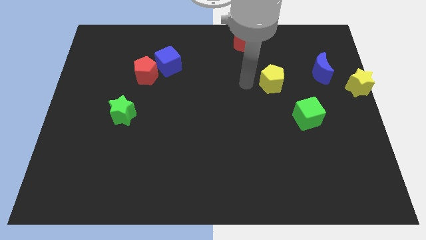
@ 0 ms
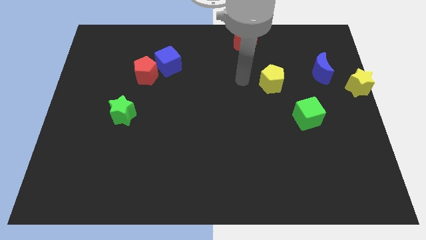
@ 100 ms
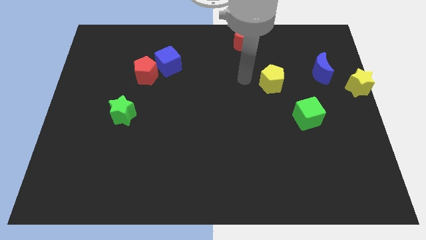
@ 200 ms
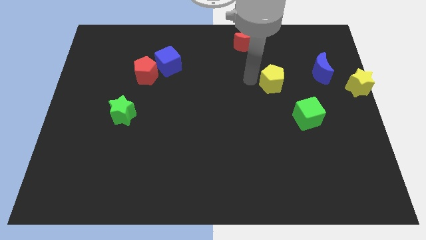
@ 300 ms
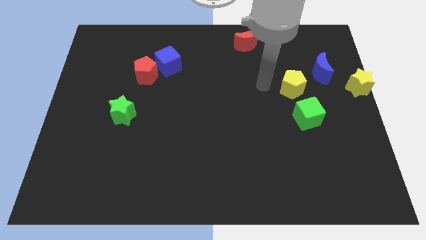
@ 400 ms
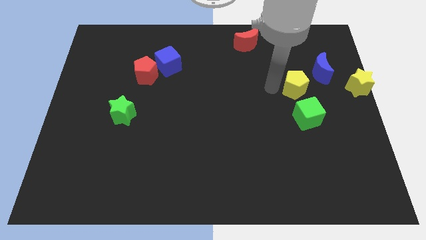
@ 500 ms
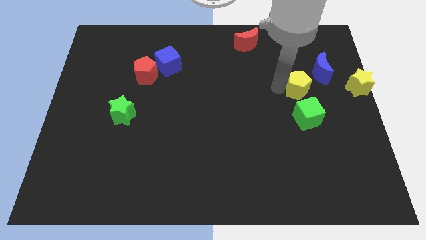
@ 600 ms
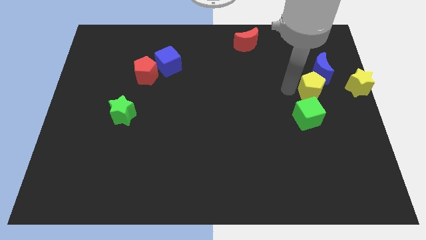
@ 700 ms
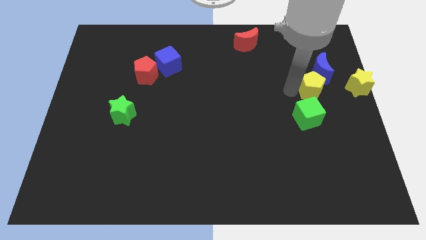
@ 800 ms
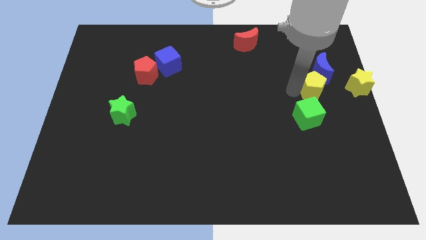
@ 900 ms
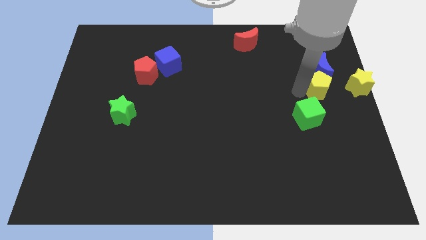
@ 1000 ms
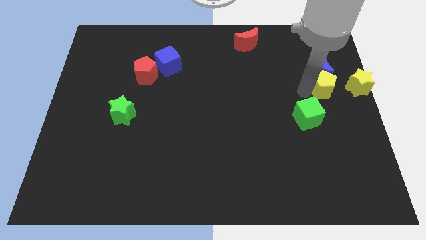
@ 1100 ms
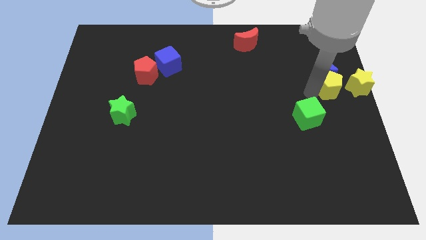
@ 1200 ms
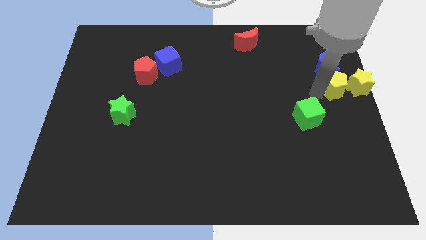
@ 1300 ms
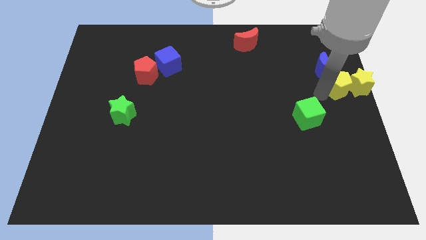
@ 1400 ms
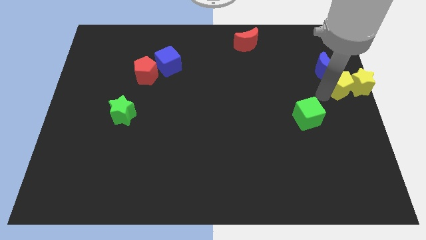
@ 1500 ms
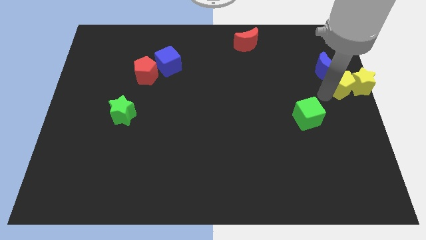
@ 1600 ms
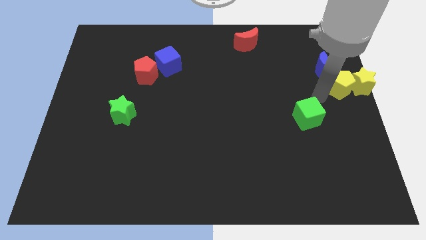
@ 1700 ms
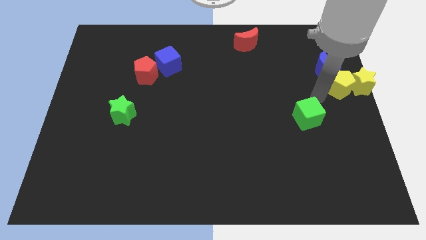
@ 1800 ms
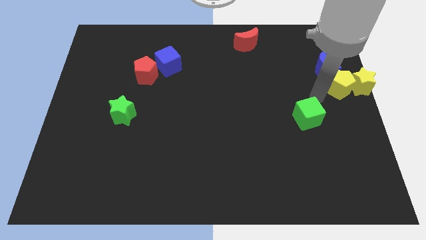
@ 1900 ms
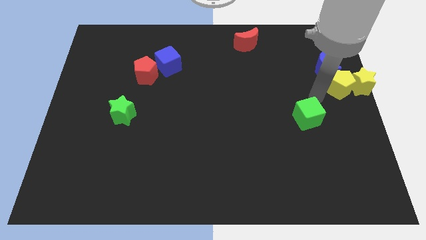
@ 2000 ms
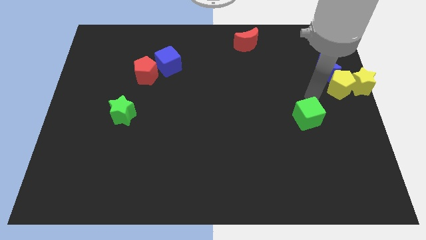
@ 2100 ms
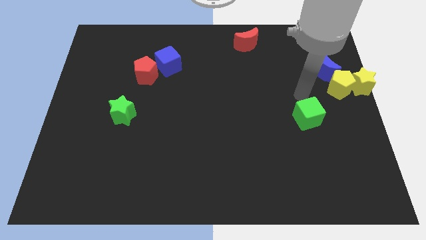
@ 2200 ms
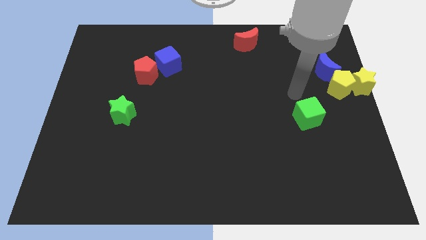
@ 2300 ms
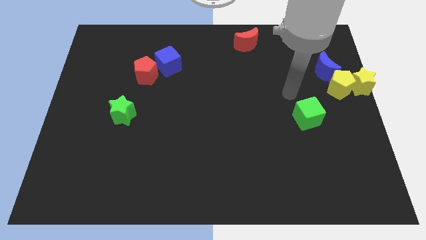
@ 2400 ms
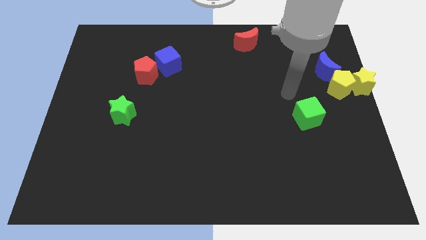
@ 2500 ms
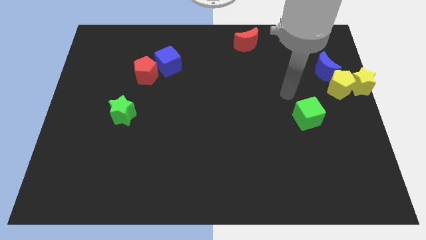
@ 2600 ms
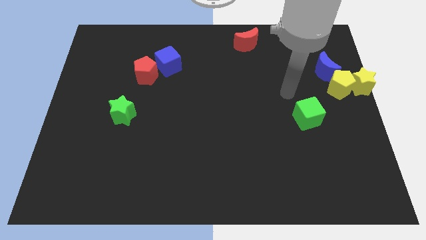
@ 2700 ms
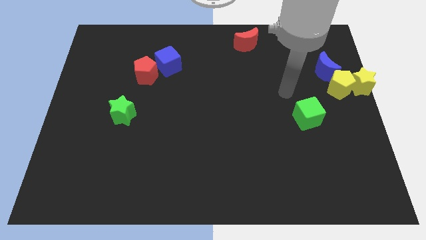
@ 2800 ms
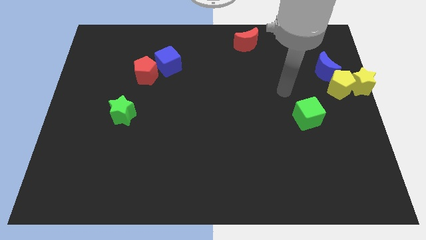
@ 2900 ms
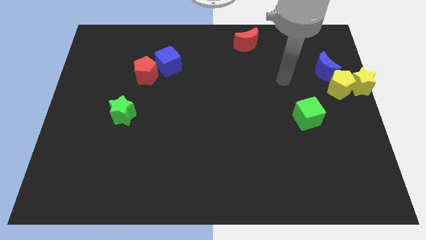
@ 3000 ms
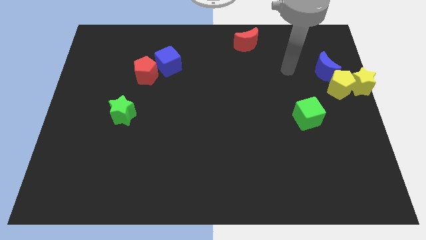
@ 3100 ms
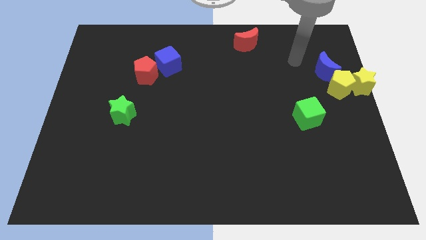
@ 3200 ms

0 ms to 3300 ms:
move the yellow blocks to the right side

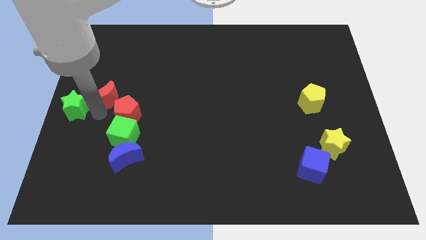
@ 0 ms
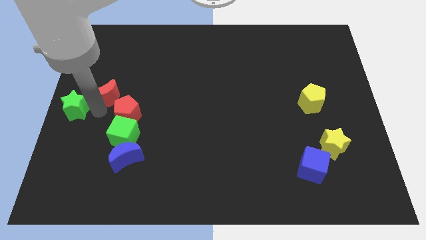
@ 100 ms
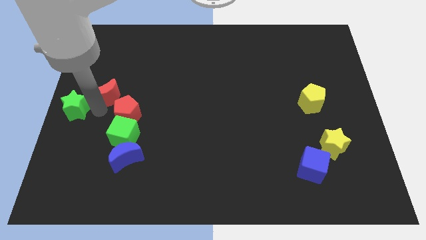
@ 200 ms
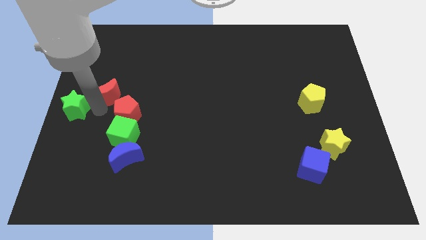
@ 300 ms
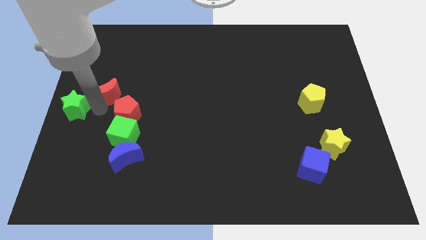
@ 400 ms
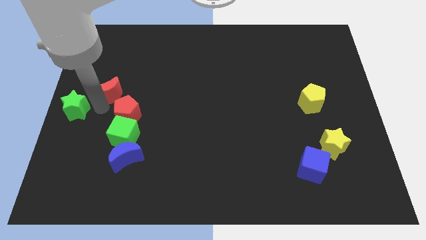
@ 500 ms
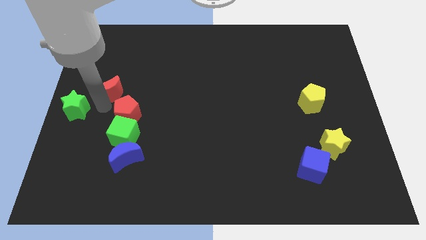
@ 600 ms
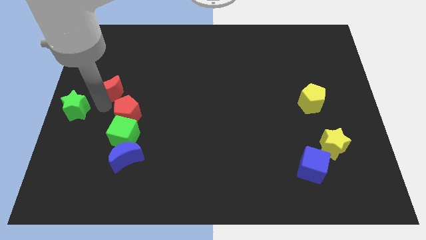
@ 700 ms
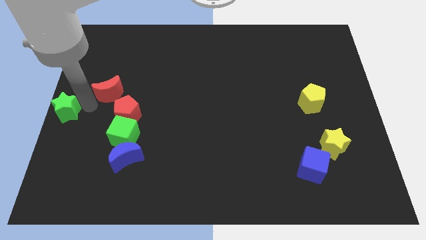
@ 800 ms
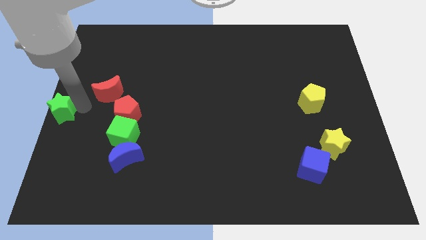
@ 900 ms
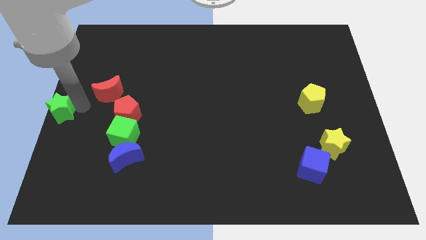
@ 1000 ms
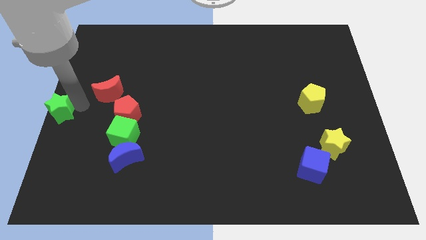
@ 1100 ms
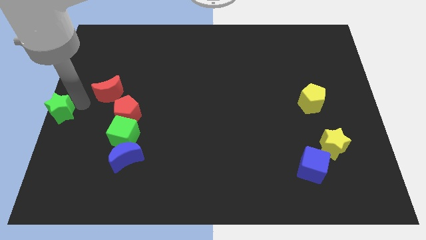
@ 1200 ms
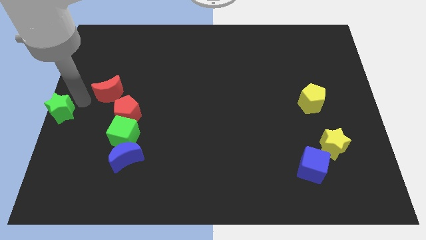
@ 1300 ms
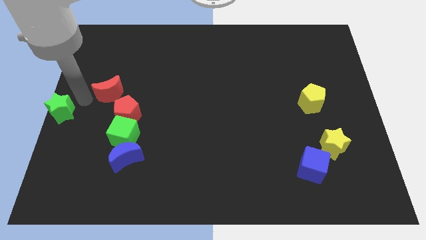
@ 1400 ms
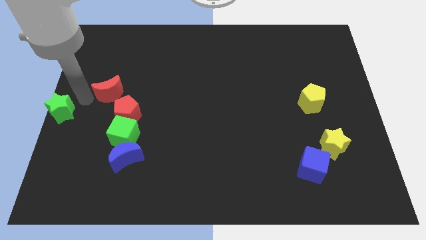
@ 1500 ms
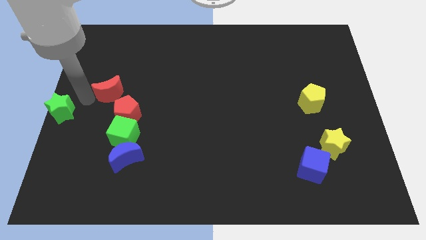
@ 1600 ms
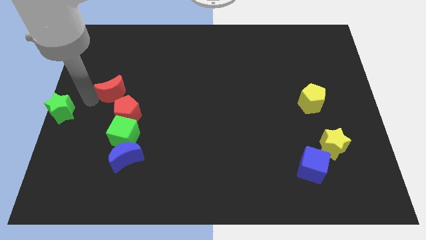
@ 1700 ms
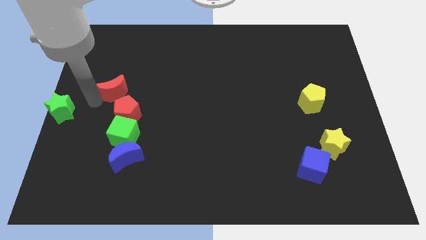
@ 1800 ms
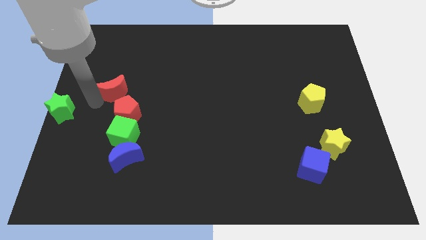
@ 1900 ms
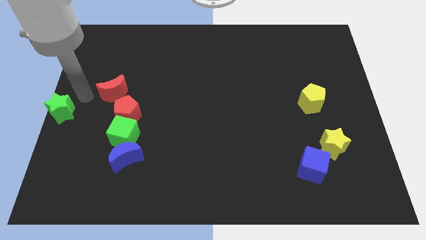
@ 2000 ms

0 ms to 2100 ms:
separate the red crescent and green star

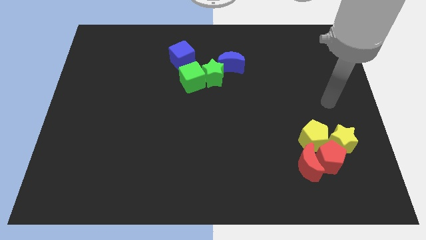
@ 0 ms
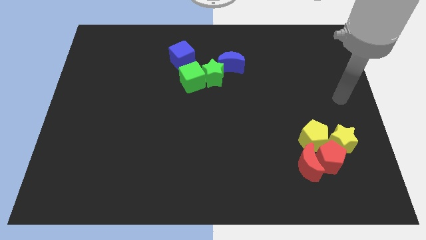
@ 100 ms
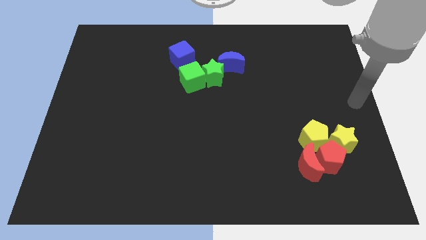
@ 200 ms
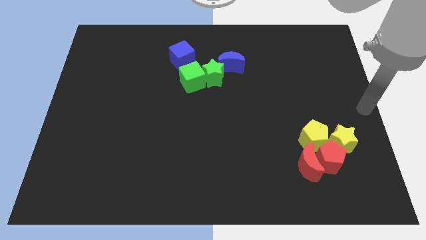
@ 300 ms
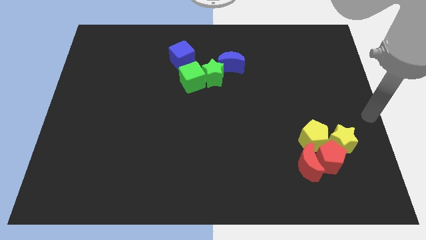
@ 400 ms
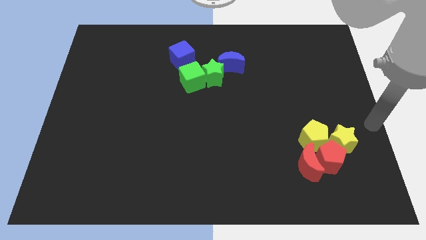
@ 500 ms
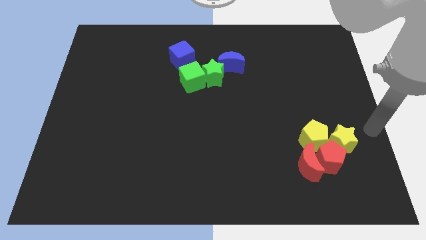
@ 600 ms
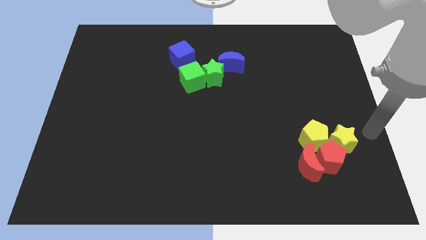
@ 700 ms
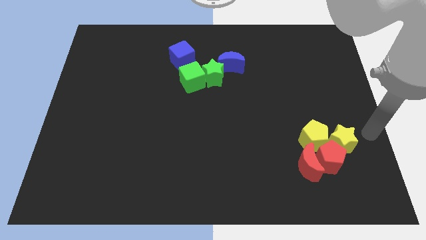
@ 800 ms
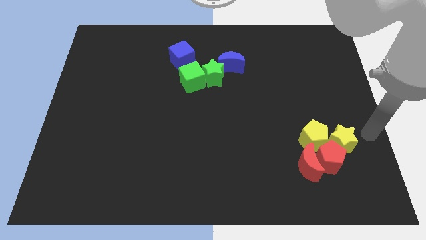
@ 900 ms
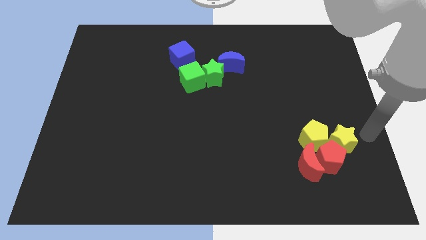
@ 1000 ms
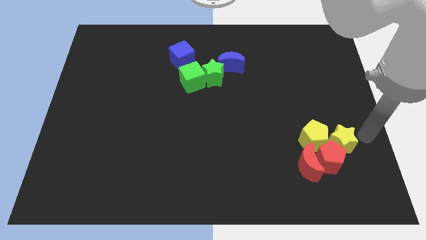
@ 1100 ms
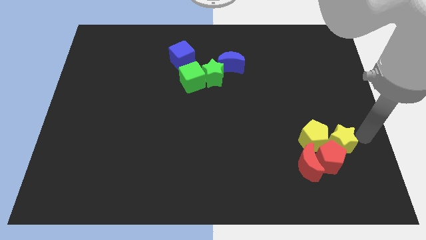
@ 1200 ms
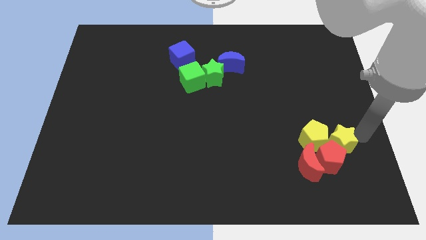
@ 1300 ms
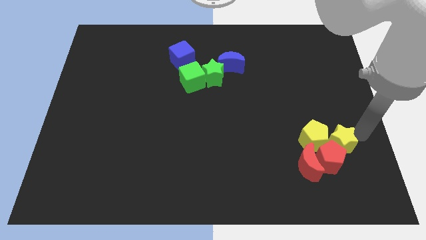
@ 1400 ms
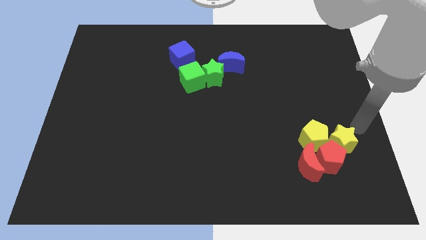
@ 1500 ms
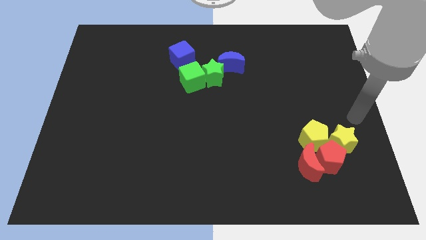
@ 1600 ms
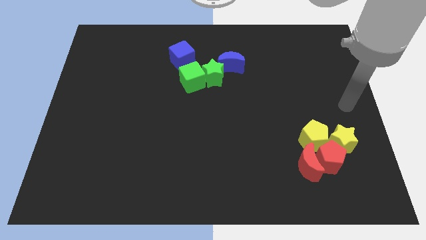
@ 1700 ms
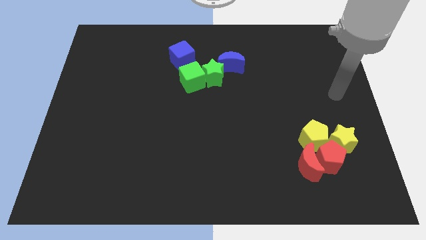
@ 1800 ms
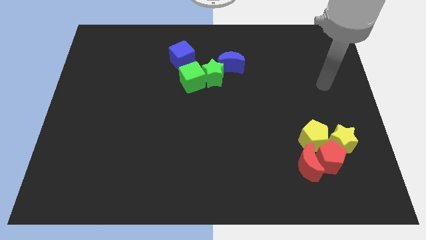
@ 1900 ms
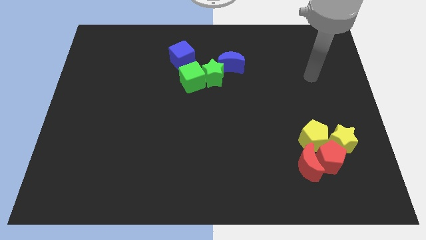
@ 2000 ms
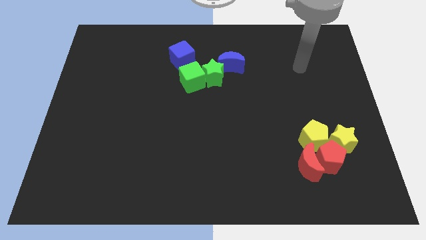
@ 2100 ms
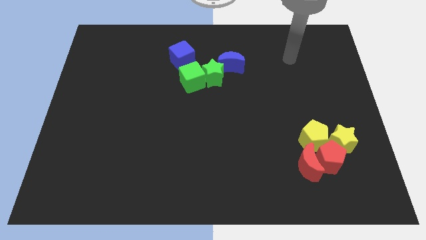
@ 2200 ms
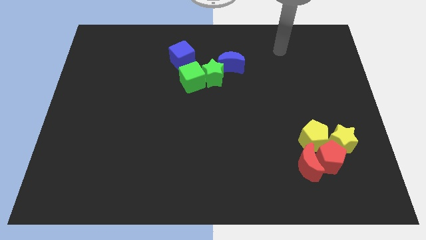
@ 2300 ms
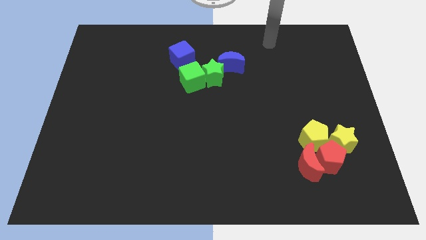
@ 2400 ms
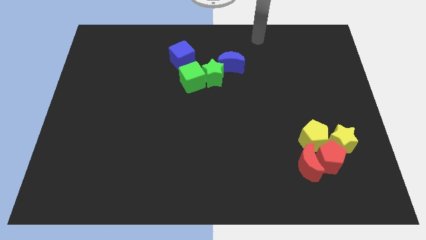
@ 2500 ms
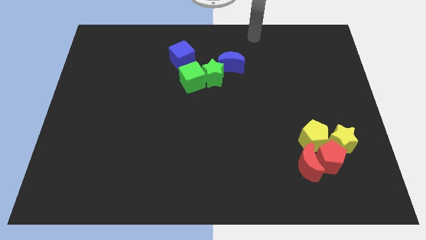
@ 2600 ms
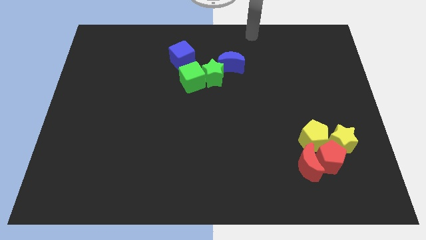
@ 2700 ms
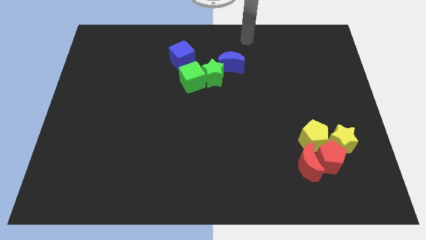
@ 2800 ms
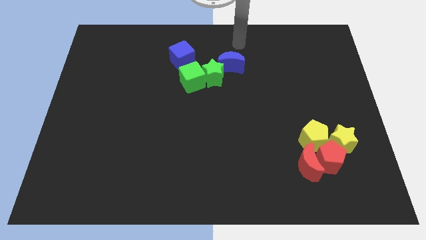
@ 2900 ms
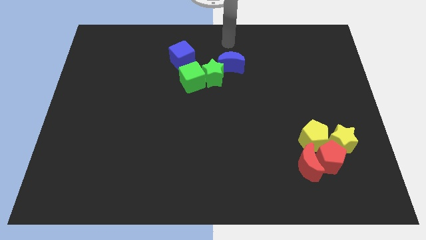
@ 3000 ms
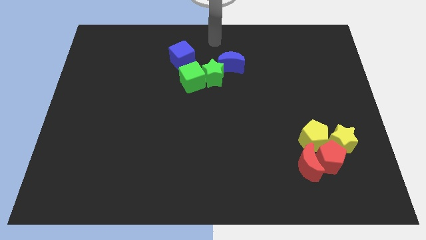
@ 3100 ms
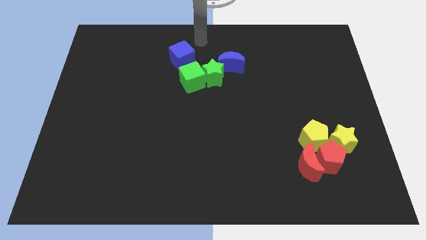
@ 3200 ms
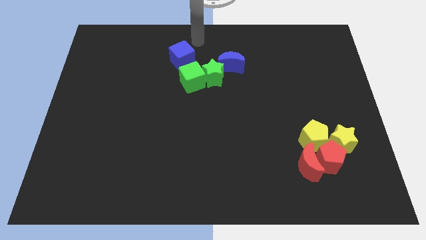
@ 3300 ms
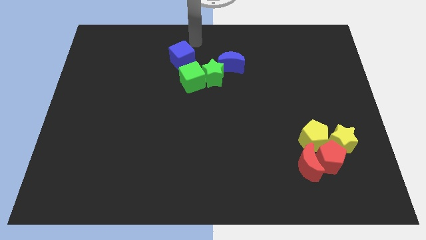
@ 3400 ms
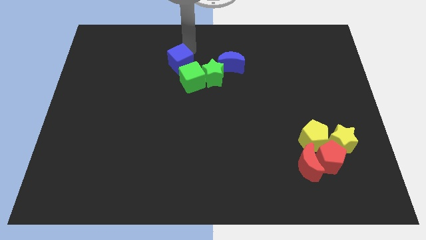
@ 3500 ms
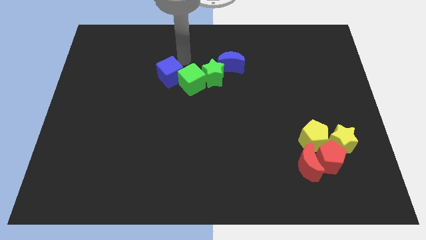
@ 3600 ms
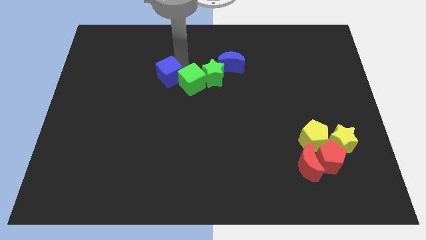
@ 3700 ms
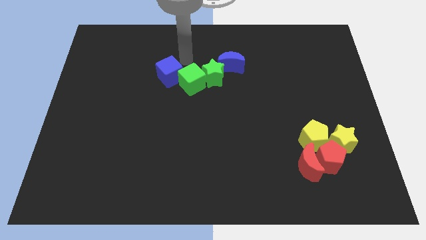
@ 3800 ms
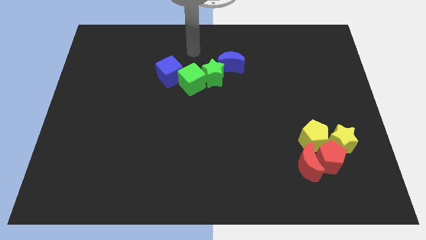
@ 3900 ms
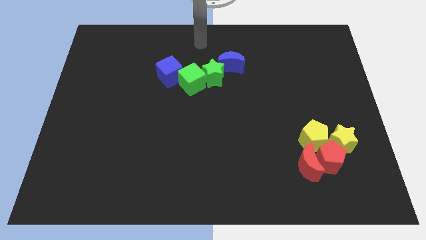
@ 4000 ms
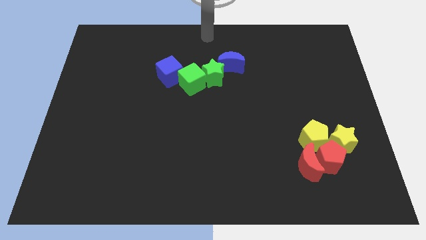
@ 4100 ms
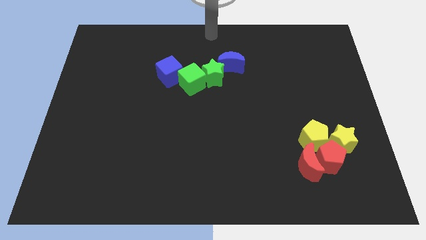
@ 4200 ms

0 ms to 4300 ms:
go and touch the blue cube
